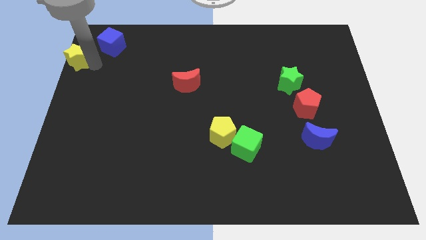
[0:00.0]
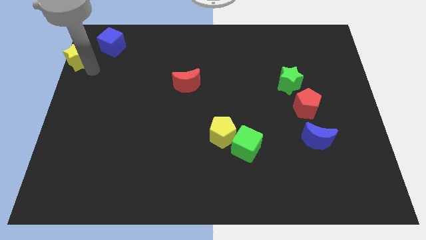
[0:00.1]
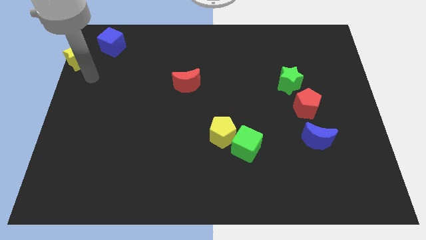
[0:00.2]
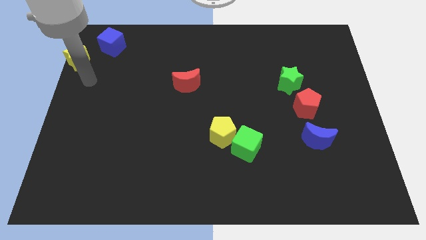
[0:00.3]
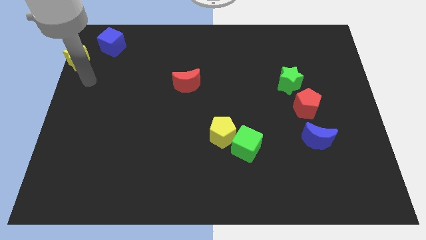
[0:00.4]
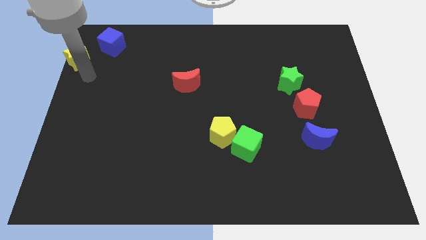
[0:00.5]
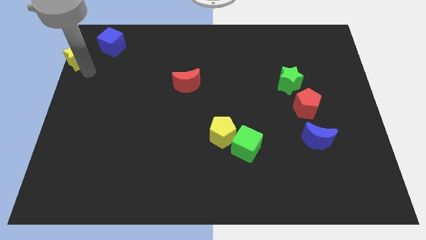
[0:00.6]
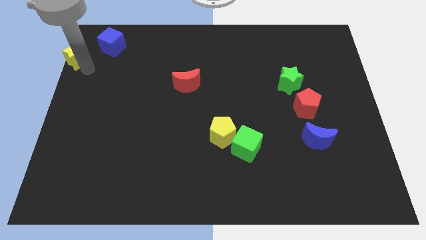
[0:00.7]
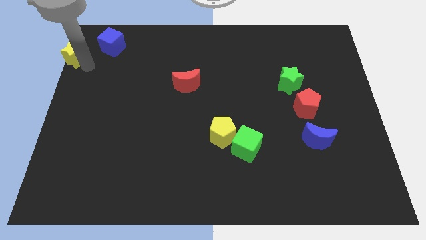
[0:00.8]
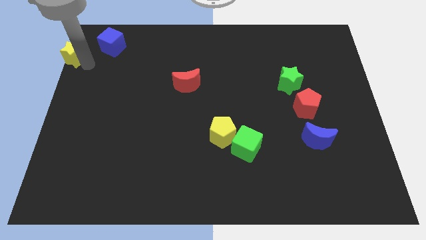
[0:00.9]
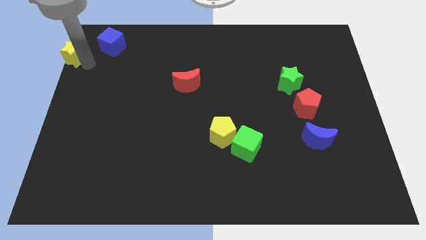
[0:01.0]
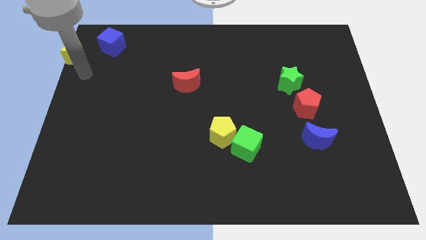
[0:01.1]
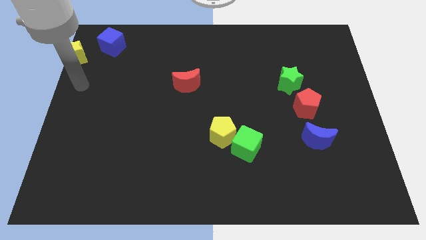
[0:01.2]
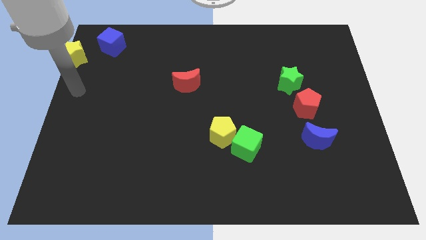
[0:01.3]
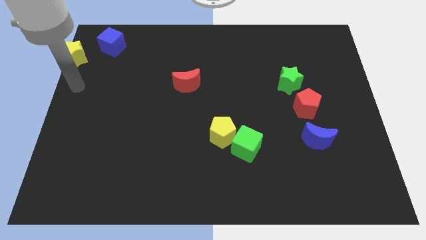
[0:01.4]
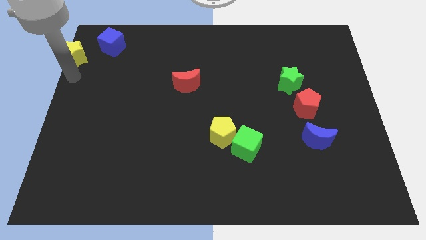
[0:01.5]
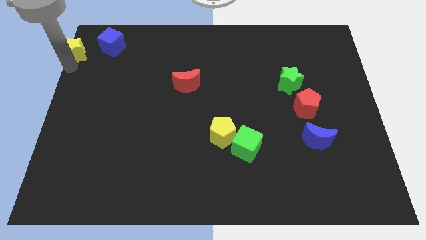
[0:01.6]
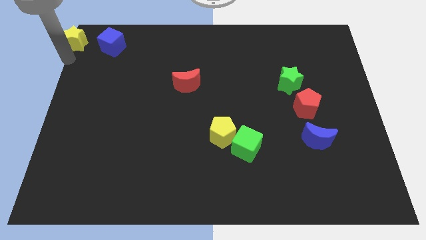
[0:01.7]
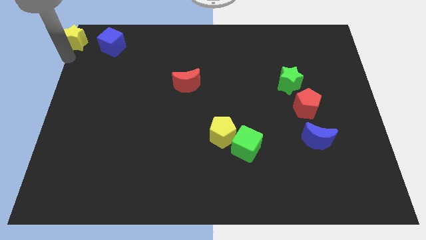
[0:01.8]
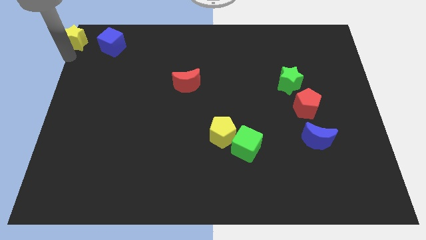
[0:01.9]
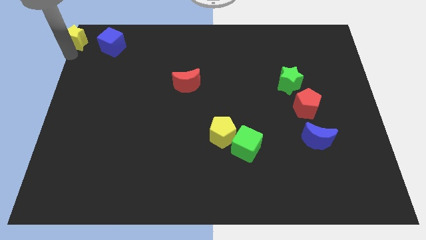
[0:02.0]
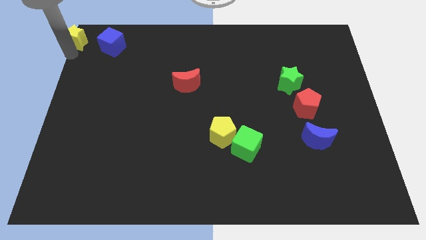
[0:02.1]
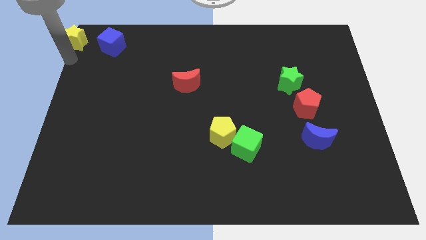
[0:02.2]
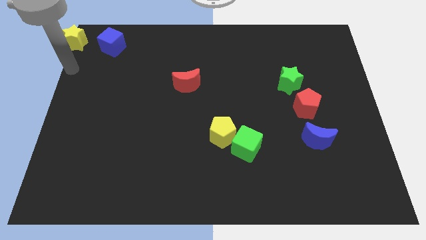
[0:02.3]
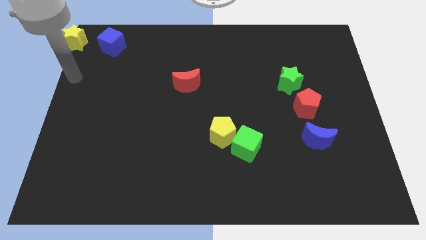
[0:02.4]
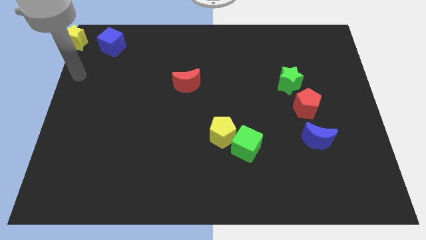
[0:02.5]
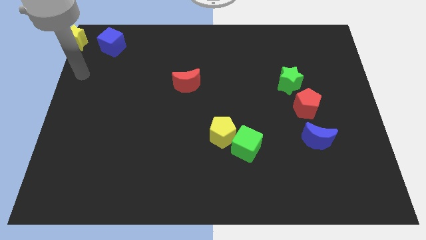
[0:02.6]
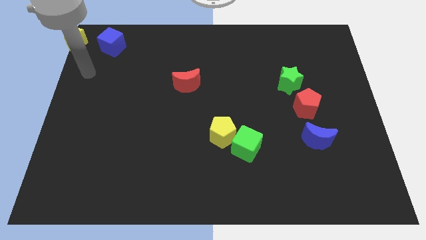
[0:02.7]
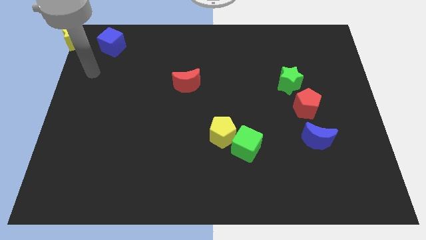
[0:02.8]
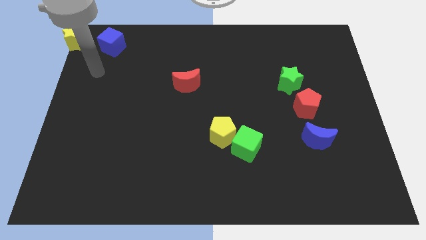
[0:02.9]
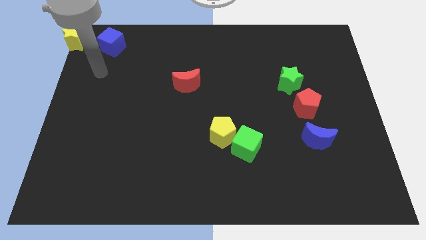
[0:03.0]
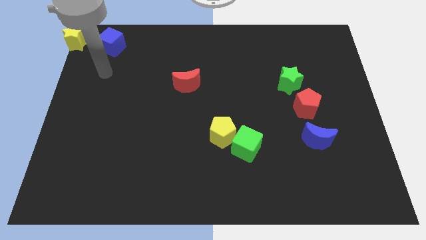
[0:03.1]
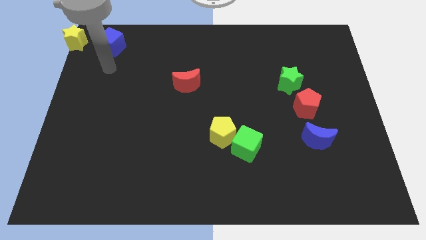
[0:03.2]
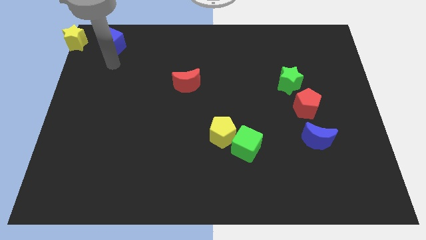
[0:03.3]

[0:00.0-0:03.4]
push the yellow star to the top left corner to the board

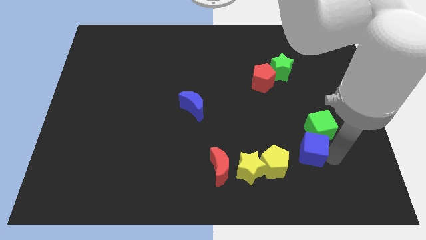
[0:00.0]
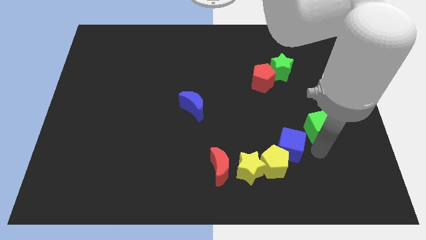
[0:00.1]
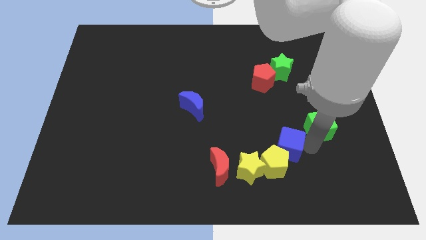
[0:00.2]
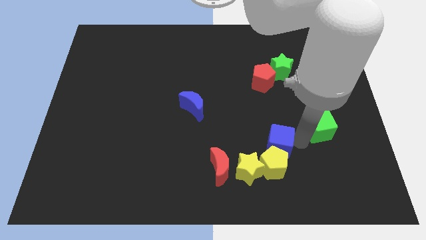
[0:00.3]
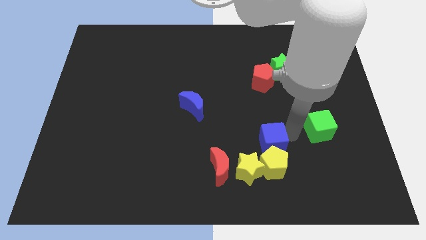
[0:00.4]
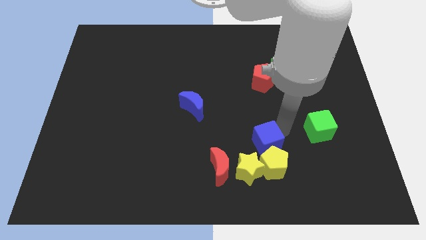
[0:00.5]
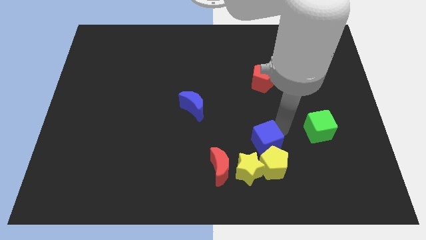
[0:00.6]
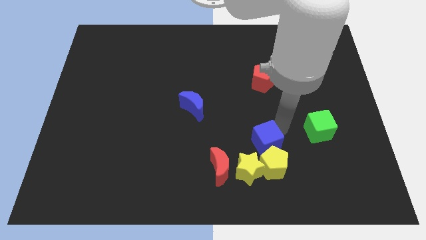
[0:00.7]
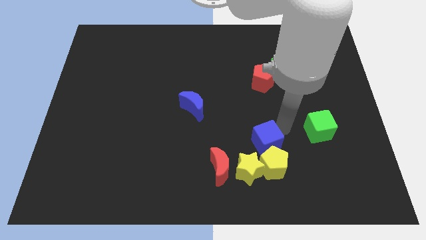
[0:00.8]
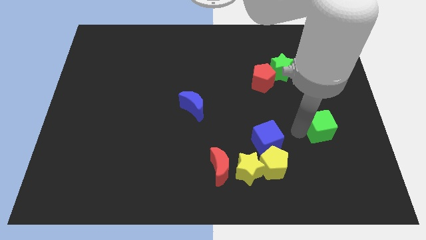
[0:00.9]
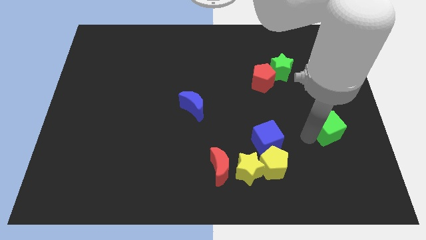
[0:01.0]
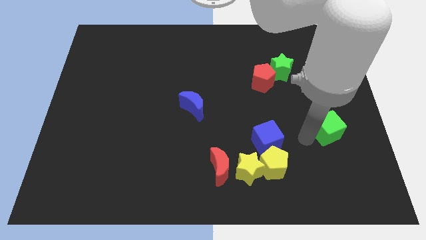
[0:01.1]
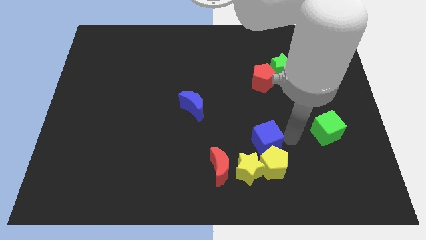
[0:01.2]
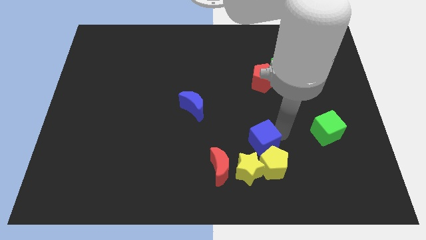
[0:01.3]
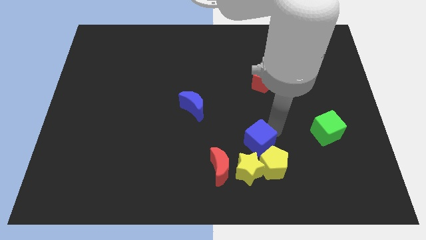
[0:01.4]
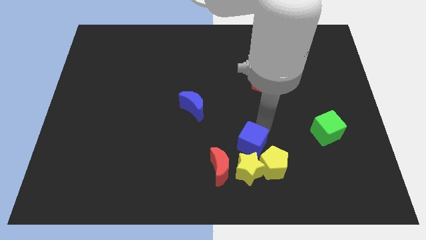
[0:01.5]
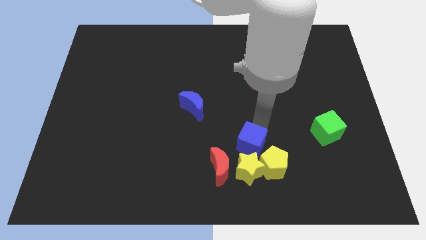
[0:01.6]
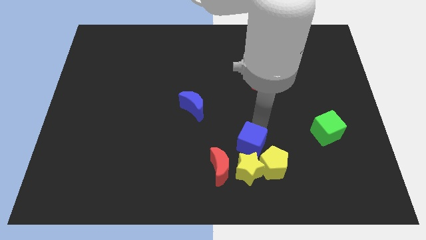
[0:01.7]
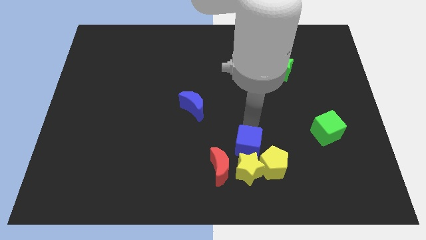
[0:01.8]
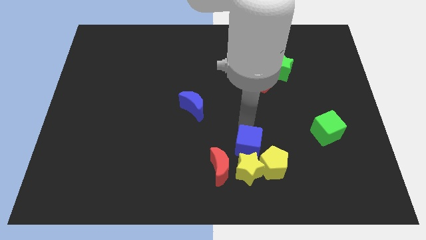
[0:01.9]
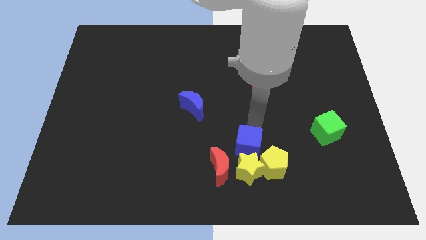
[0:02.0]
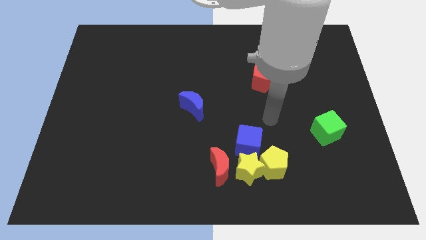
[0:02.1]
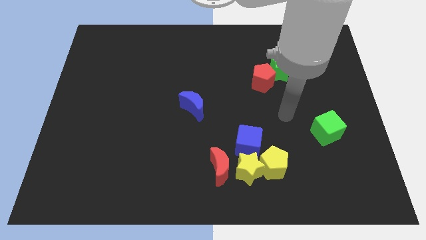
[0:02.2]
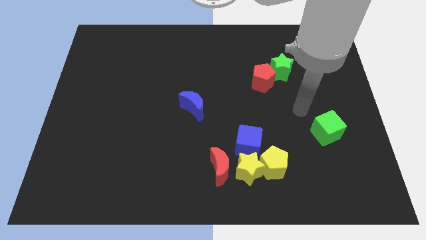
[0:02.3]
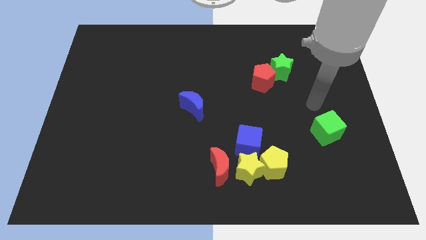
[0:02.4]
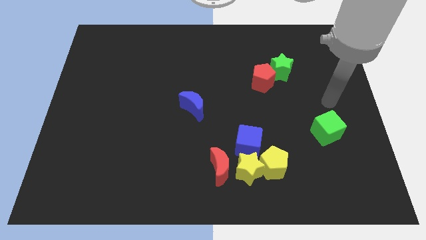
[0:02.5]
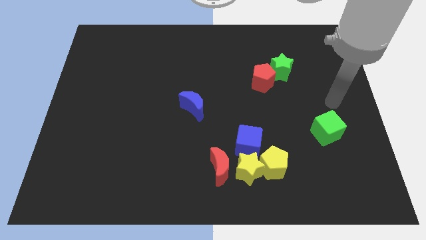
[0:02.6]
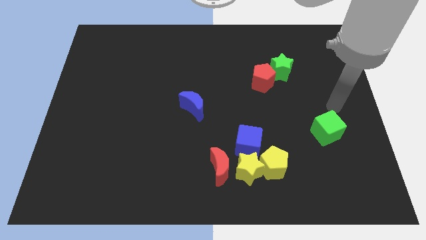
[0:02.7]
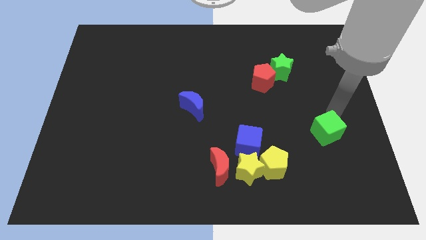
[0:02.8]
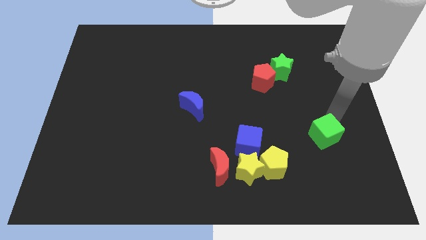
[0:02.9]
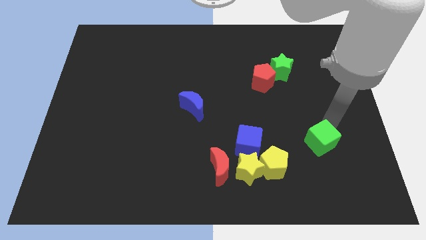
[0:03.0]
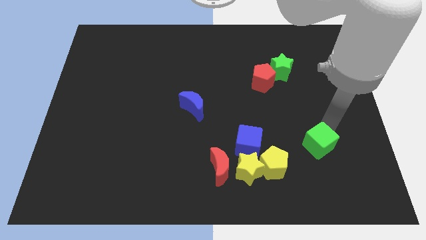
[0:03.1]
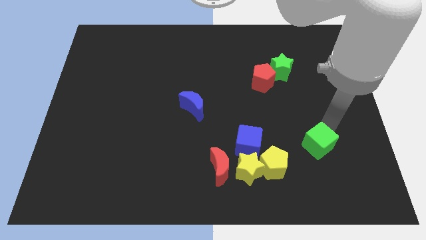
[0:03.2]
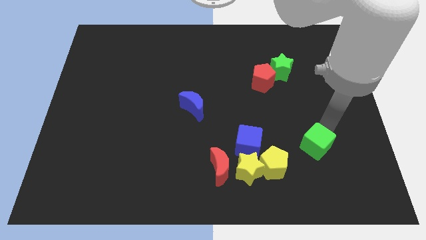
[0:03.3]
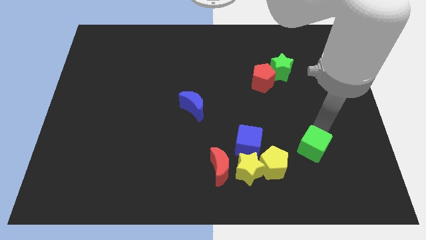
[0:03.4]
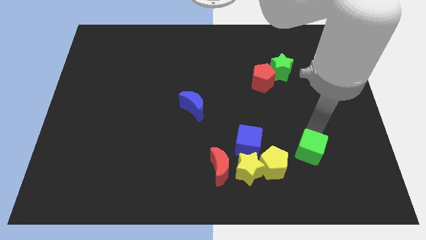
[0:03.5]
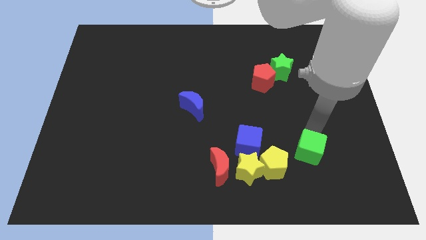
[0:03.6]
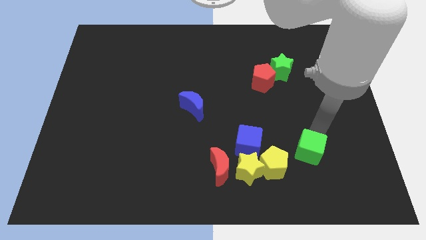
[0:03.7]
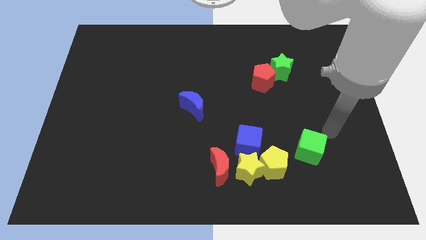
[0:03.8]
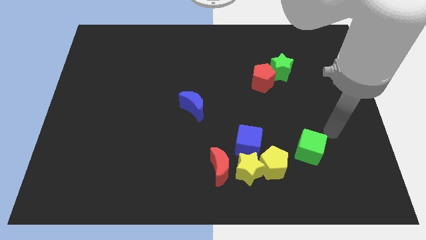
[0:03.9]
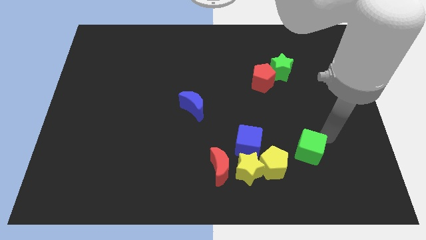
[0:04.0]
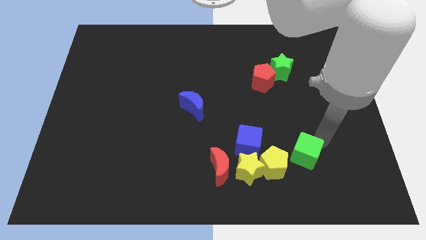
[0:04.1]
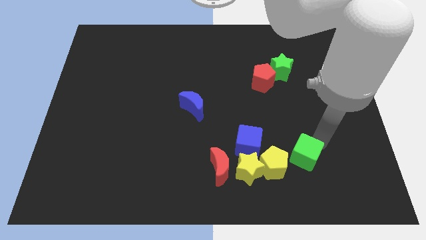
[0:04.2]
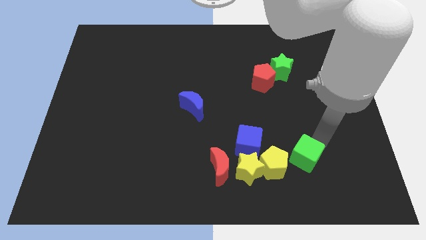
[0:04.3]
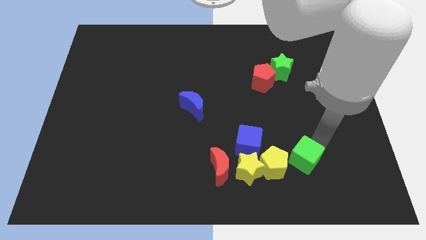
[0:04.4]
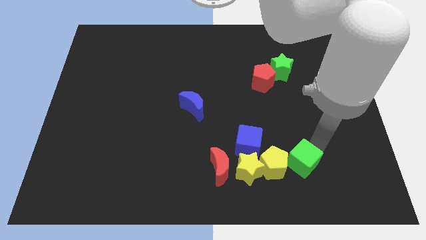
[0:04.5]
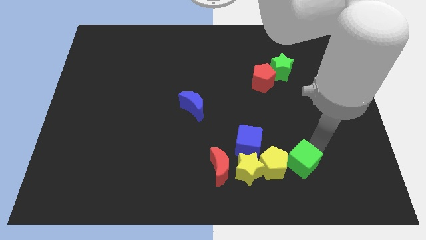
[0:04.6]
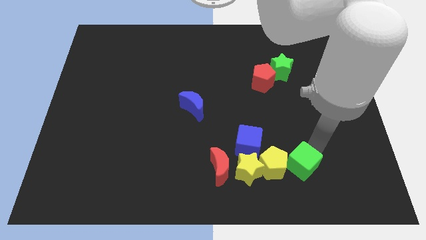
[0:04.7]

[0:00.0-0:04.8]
place the green cube right to the yellow pentagon

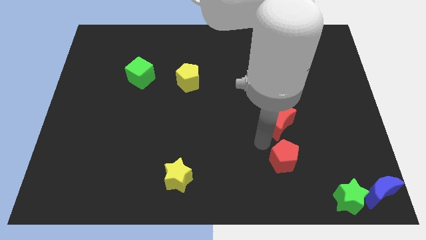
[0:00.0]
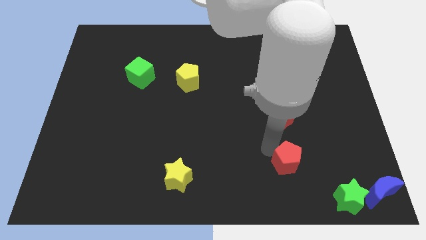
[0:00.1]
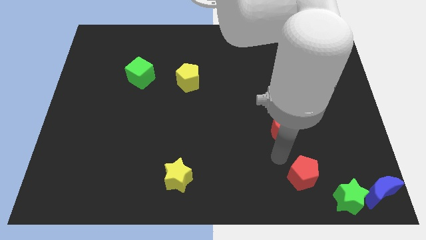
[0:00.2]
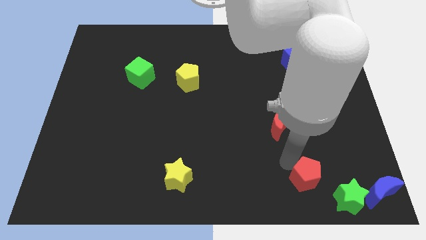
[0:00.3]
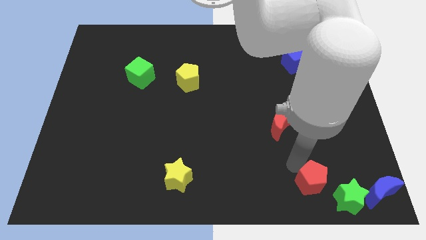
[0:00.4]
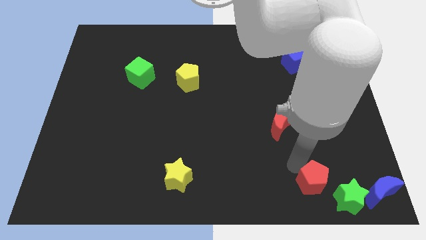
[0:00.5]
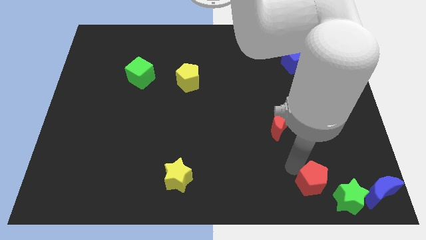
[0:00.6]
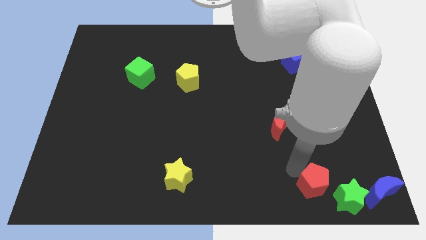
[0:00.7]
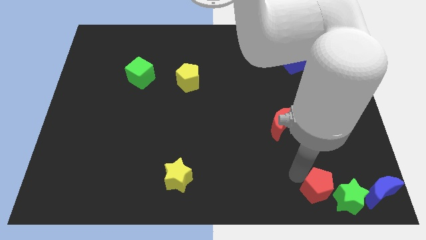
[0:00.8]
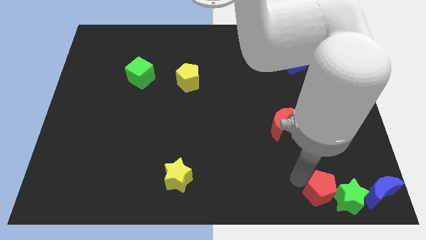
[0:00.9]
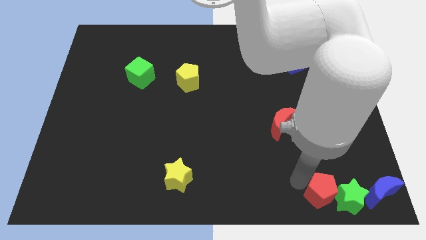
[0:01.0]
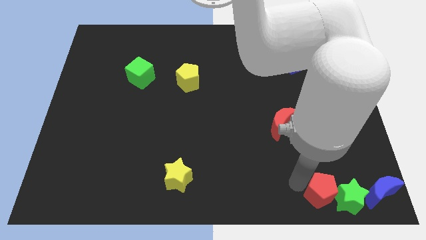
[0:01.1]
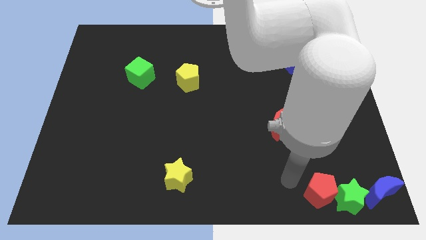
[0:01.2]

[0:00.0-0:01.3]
move the red pentagon to the left of the green star
